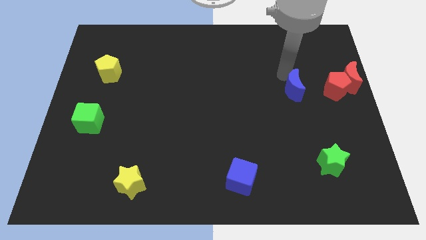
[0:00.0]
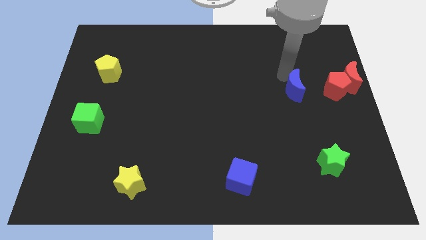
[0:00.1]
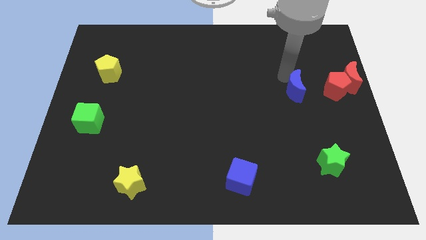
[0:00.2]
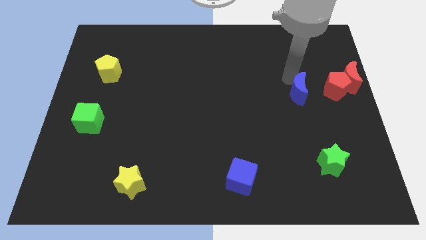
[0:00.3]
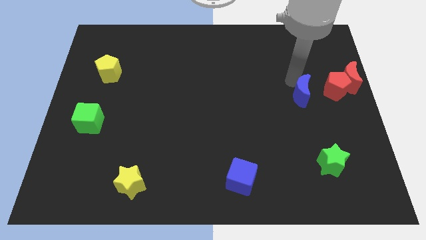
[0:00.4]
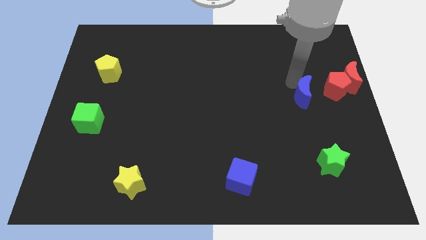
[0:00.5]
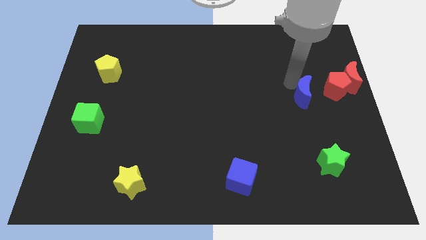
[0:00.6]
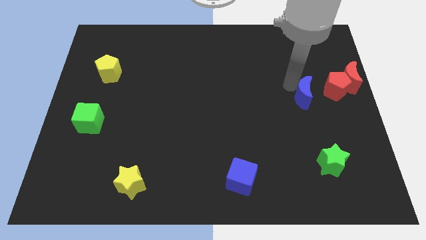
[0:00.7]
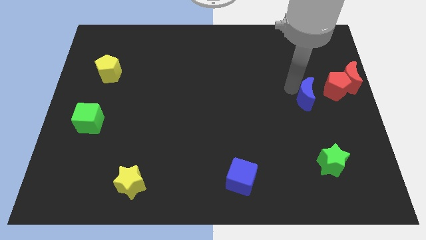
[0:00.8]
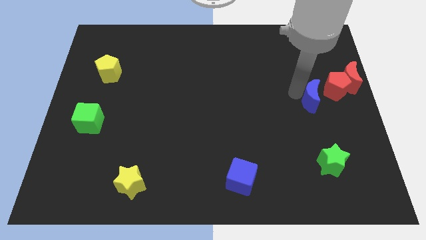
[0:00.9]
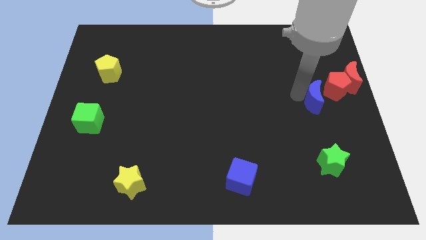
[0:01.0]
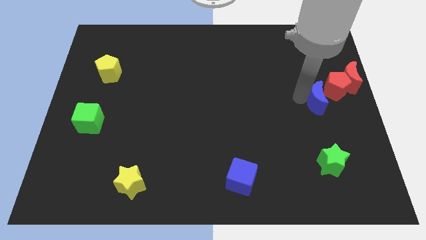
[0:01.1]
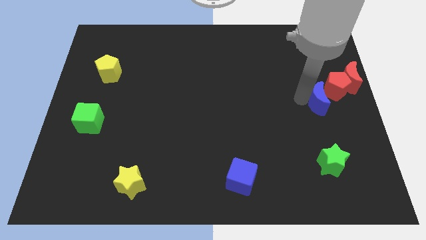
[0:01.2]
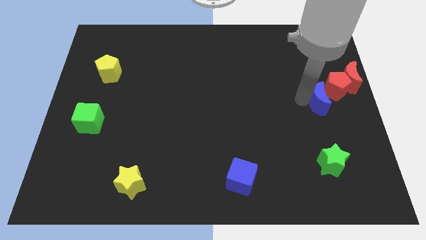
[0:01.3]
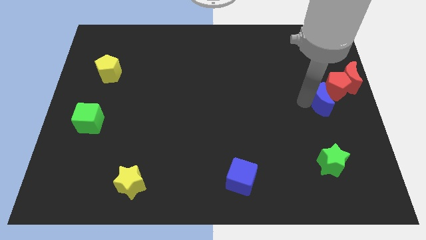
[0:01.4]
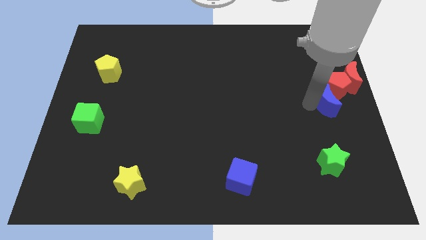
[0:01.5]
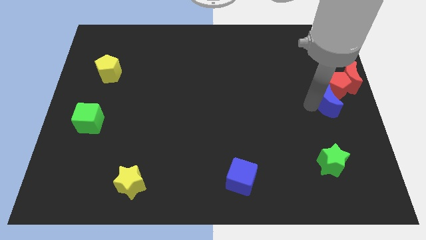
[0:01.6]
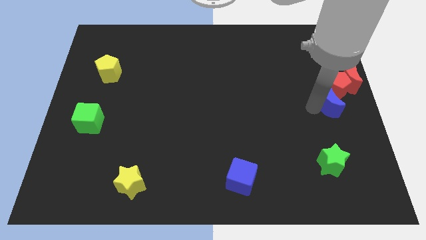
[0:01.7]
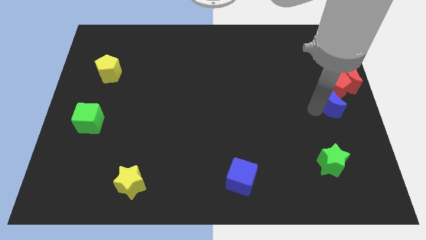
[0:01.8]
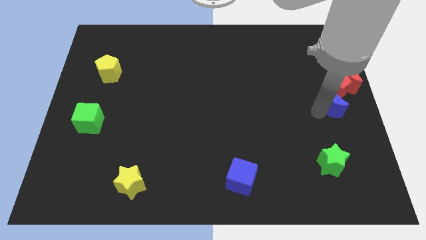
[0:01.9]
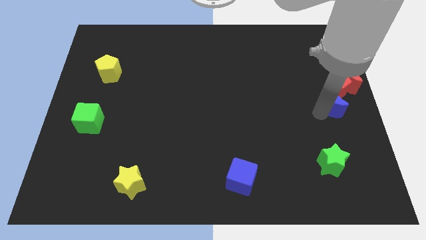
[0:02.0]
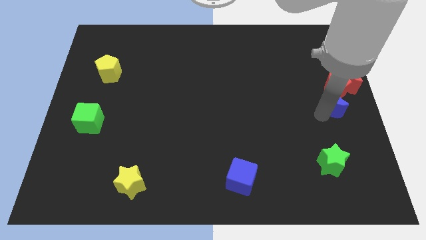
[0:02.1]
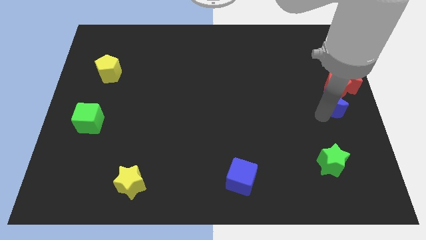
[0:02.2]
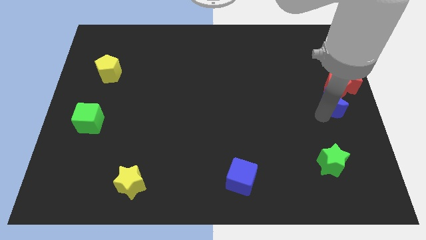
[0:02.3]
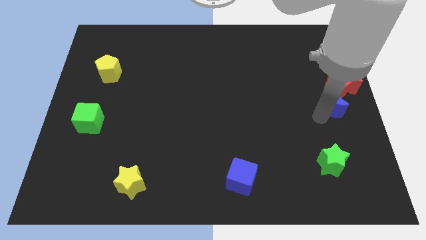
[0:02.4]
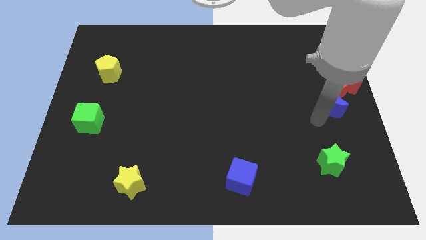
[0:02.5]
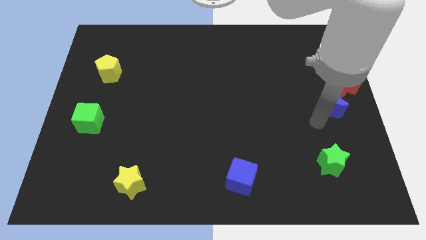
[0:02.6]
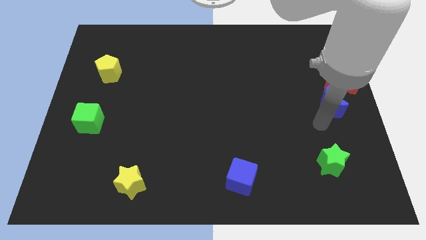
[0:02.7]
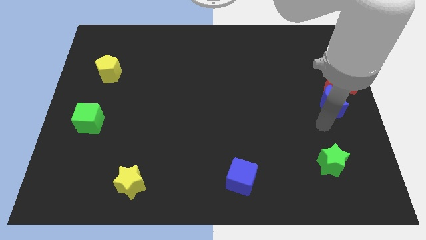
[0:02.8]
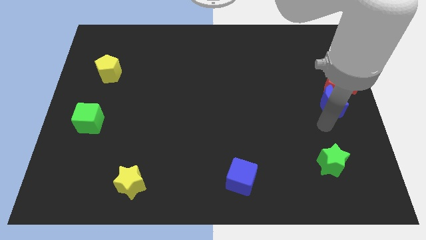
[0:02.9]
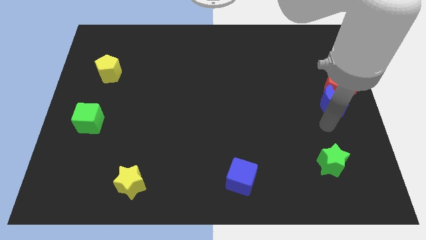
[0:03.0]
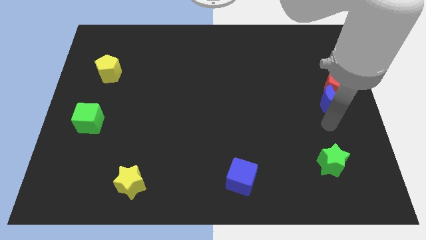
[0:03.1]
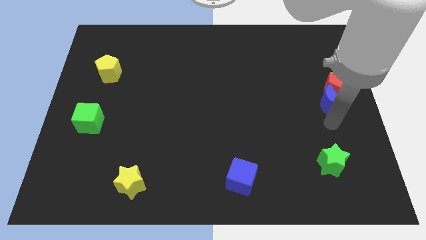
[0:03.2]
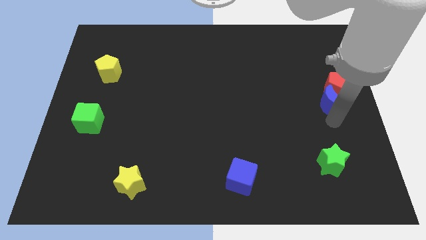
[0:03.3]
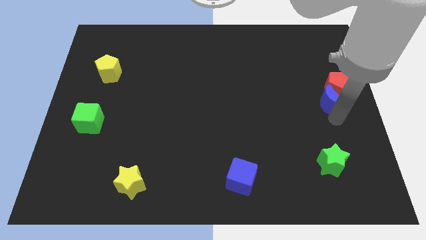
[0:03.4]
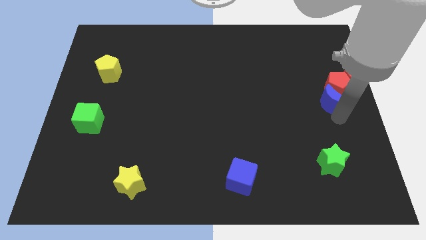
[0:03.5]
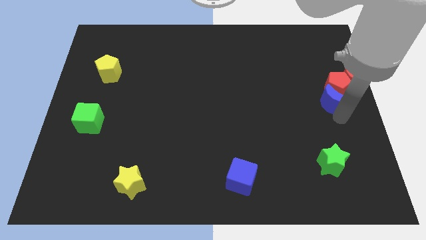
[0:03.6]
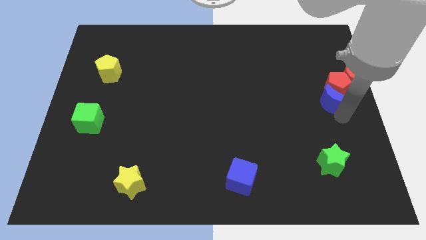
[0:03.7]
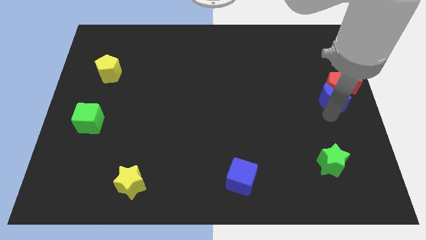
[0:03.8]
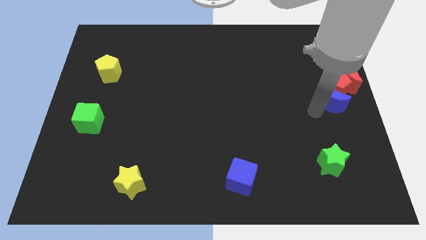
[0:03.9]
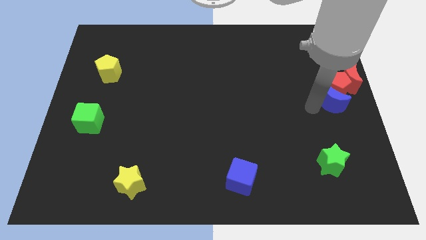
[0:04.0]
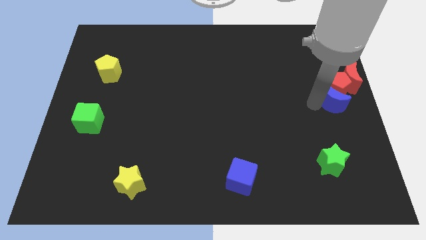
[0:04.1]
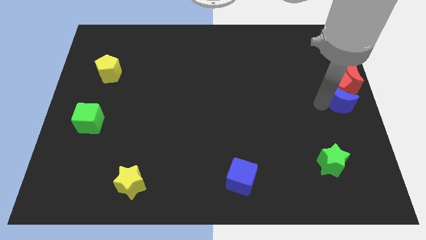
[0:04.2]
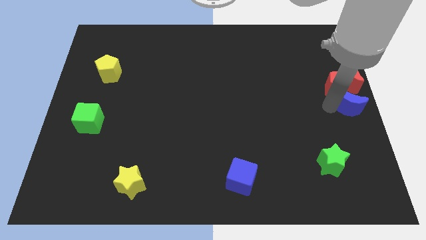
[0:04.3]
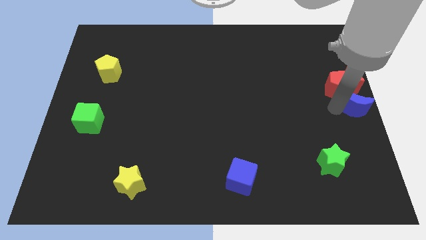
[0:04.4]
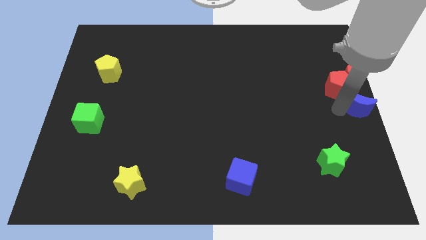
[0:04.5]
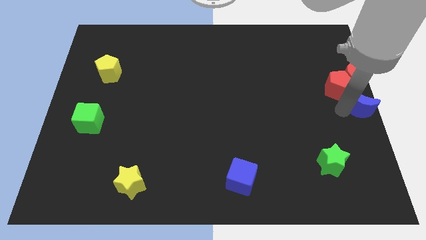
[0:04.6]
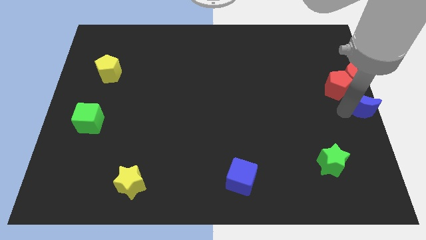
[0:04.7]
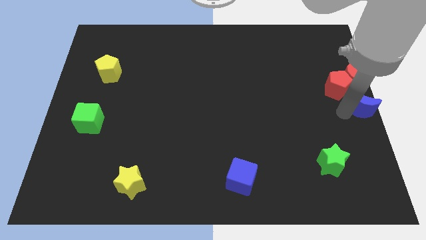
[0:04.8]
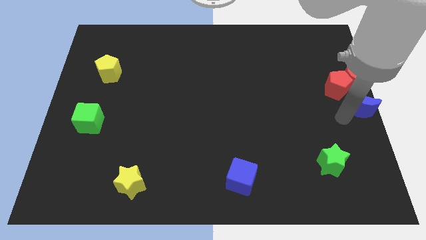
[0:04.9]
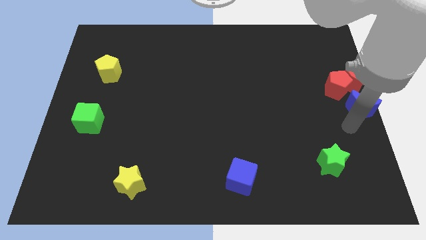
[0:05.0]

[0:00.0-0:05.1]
push the blue moon to the center right

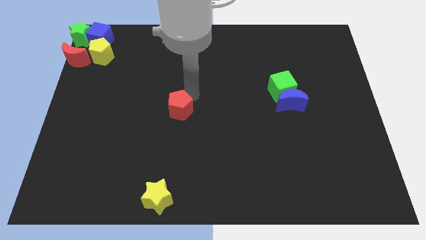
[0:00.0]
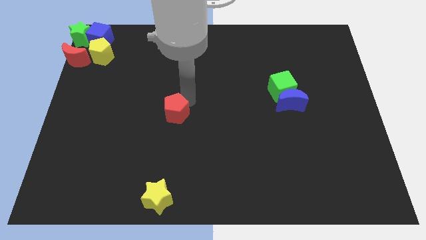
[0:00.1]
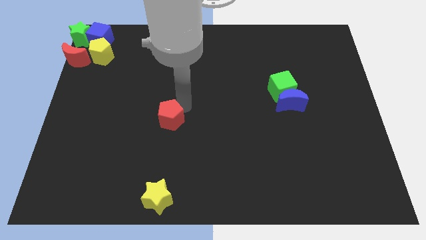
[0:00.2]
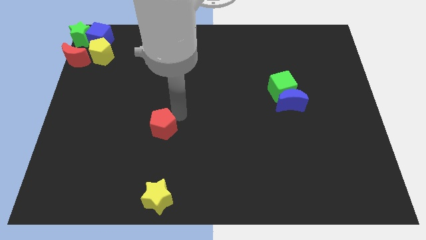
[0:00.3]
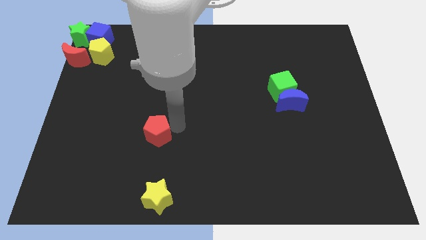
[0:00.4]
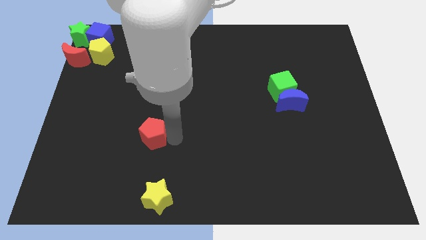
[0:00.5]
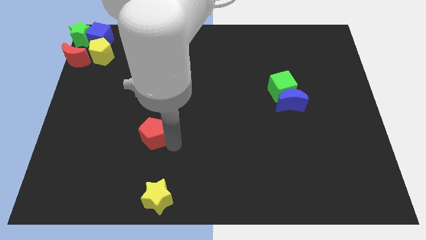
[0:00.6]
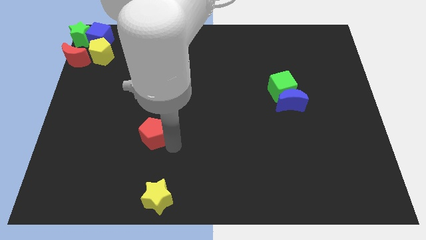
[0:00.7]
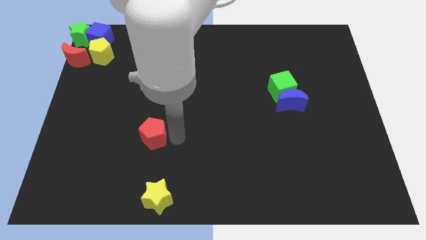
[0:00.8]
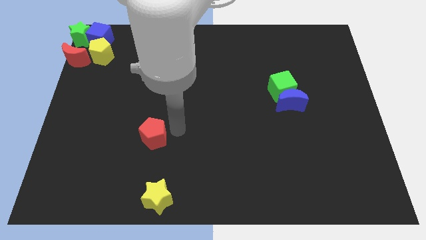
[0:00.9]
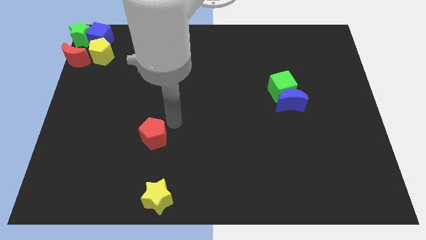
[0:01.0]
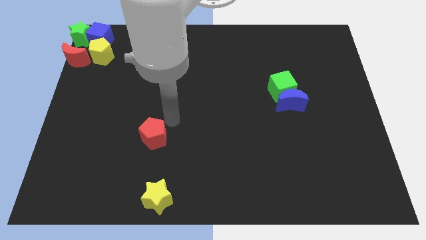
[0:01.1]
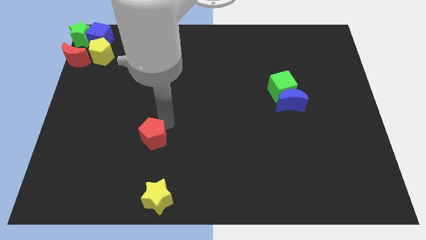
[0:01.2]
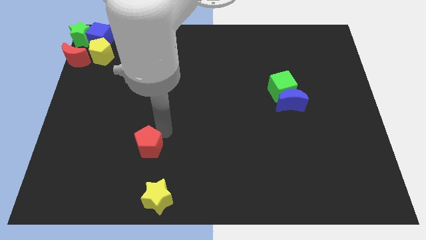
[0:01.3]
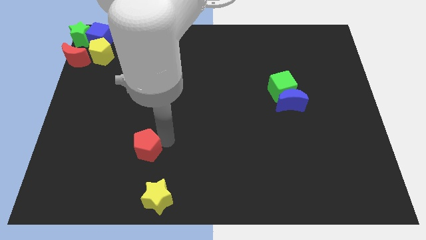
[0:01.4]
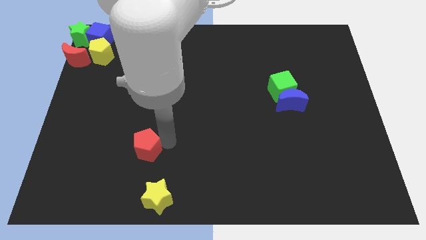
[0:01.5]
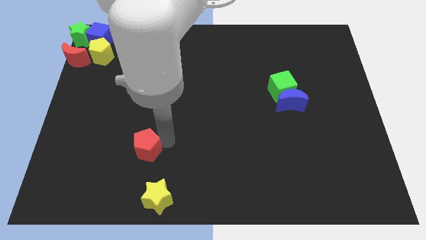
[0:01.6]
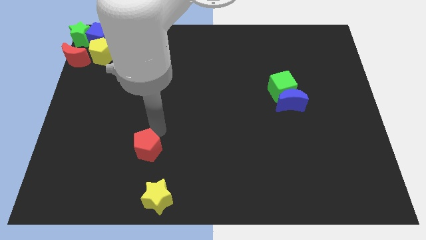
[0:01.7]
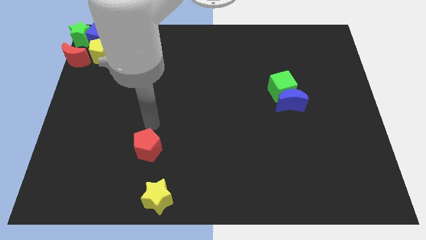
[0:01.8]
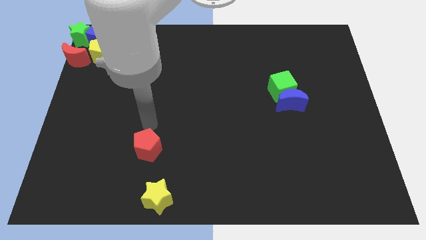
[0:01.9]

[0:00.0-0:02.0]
place the red pentagon to the top of yellow star

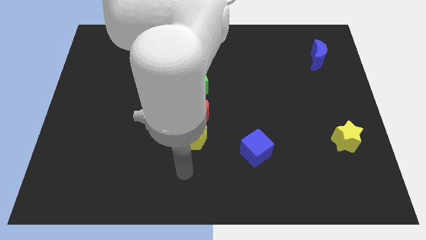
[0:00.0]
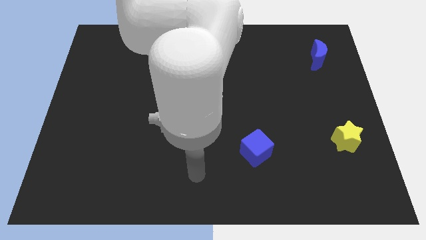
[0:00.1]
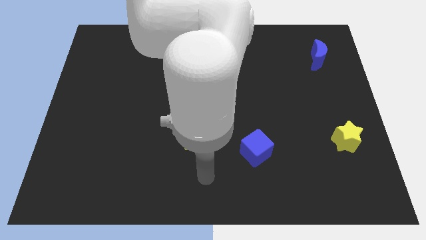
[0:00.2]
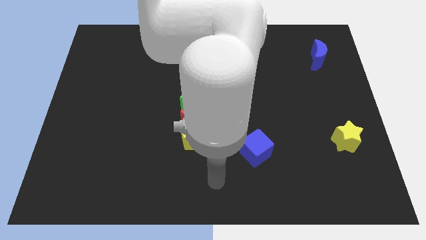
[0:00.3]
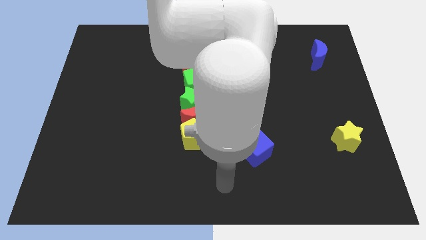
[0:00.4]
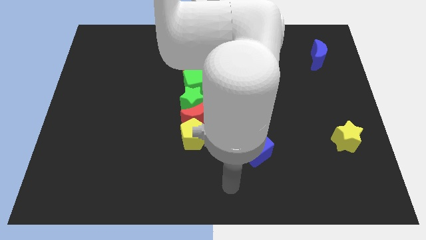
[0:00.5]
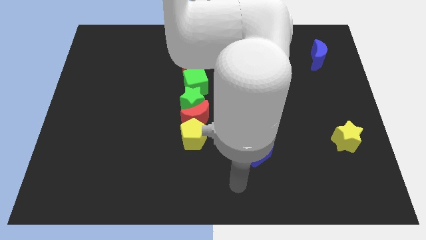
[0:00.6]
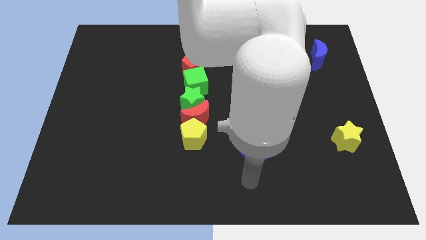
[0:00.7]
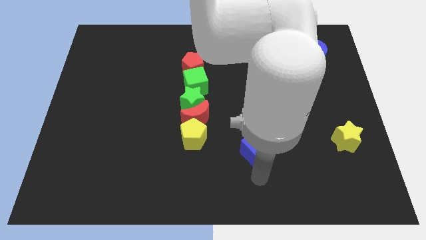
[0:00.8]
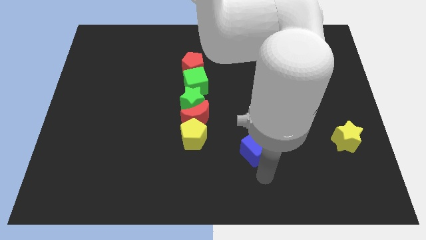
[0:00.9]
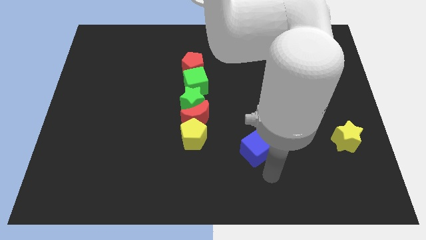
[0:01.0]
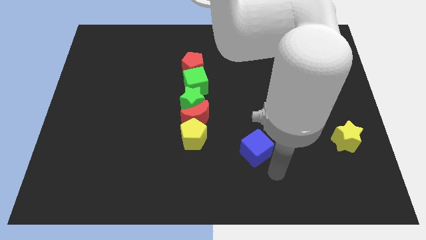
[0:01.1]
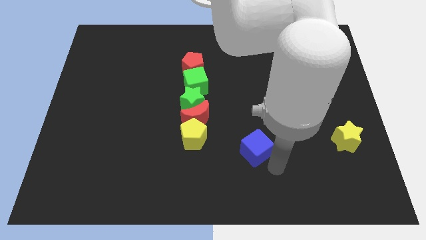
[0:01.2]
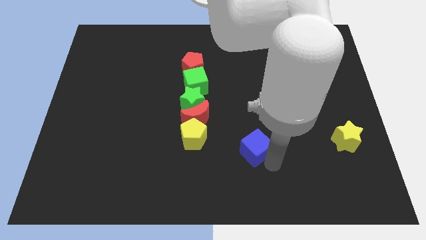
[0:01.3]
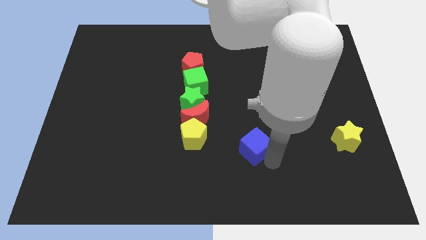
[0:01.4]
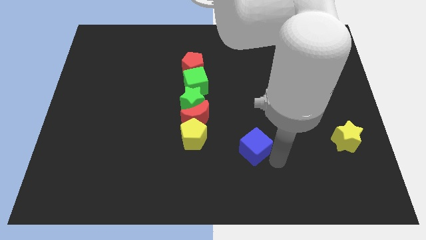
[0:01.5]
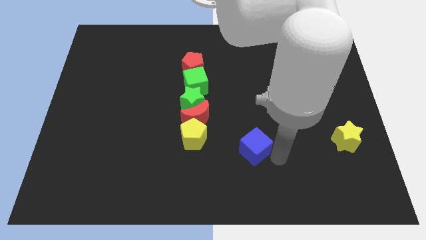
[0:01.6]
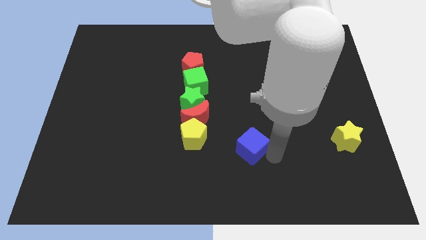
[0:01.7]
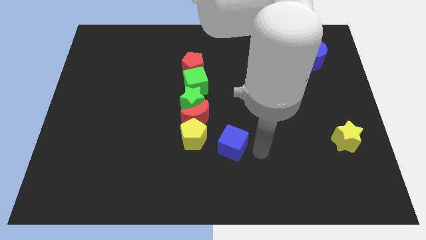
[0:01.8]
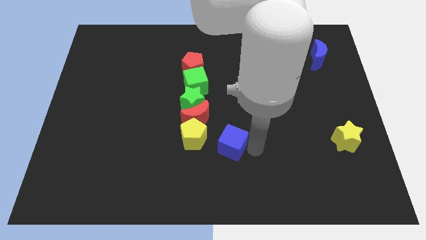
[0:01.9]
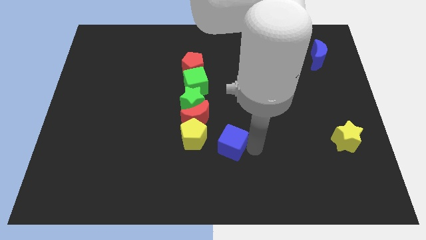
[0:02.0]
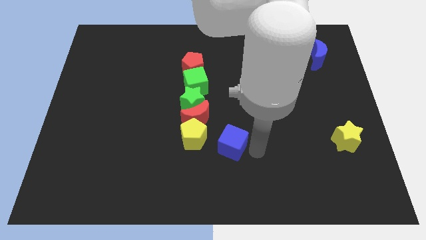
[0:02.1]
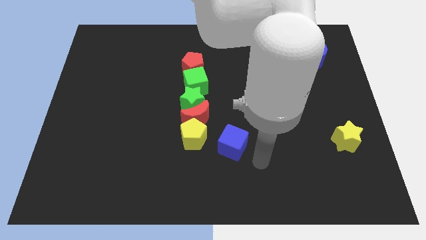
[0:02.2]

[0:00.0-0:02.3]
push the blue cube towards the yellow pentagon
